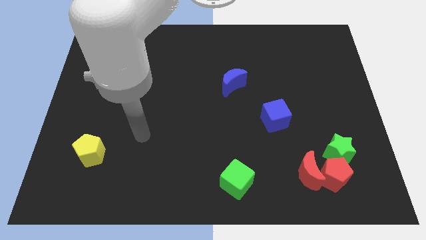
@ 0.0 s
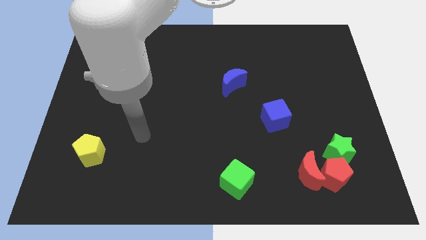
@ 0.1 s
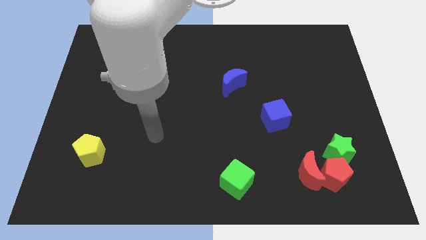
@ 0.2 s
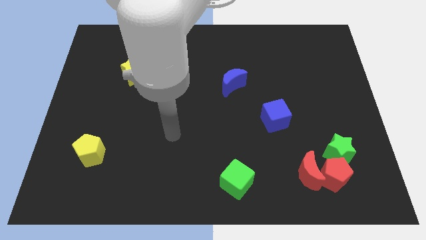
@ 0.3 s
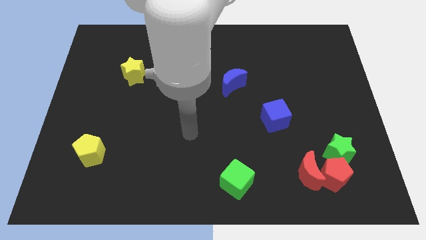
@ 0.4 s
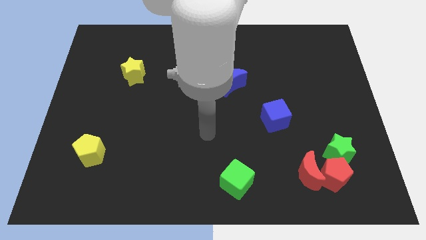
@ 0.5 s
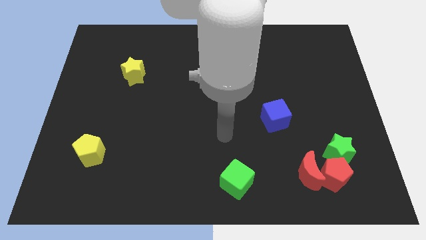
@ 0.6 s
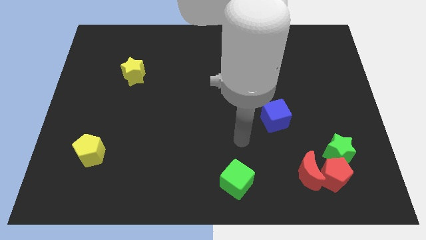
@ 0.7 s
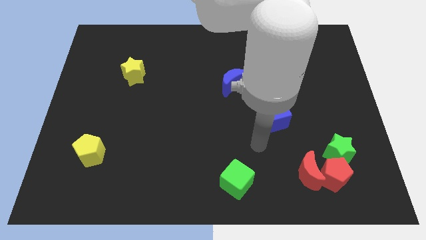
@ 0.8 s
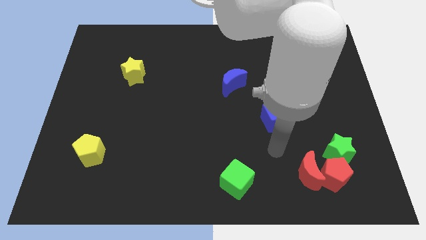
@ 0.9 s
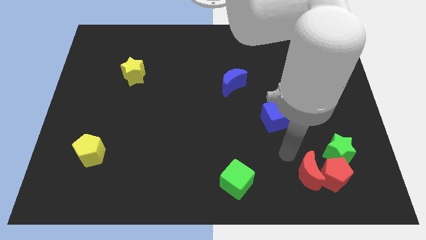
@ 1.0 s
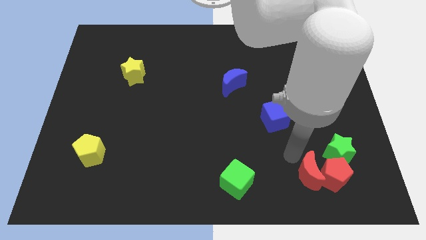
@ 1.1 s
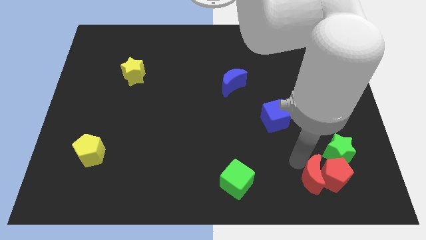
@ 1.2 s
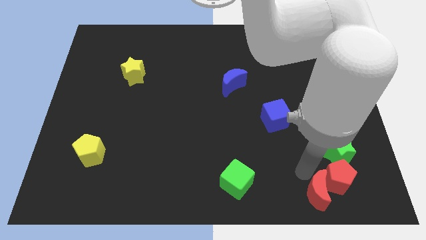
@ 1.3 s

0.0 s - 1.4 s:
touch the left side of the red crescent

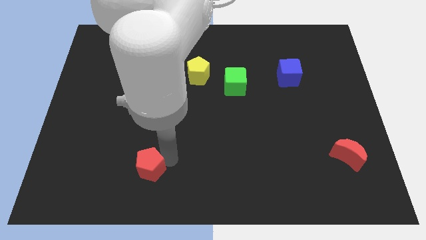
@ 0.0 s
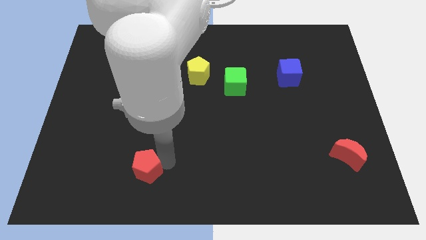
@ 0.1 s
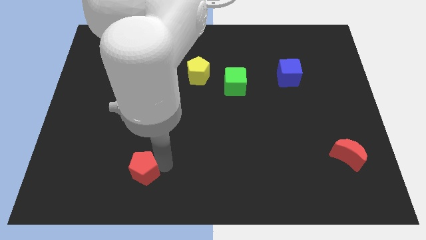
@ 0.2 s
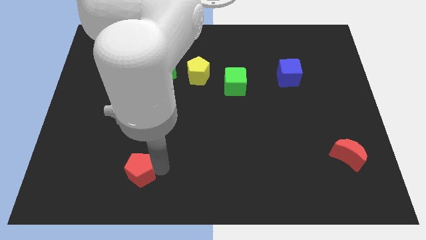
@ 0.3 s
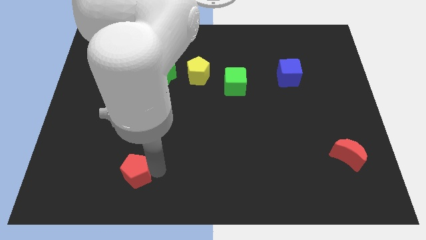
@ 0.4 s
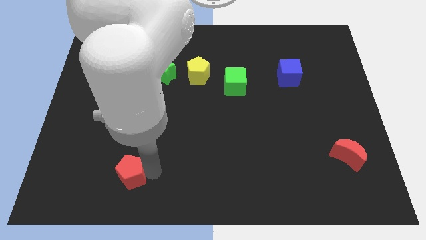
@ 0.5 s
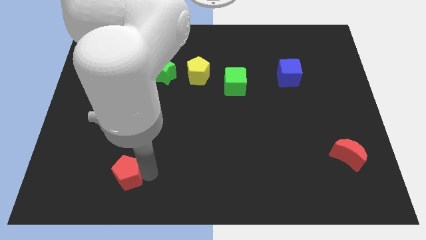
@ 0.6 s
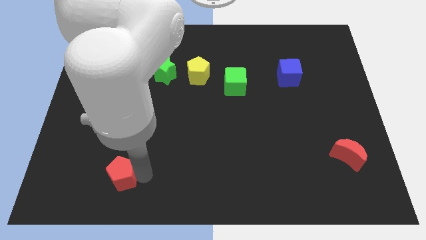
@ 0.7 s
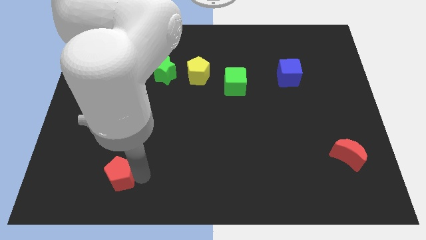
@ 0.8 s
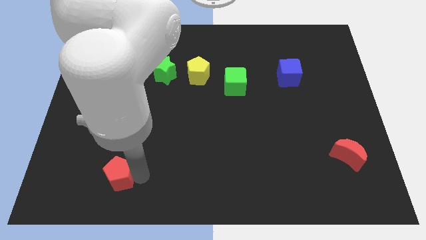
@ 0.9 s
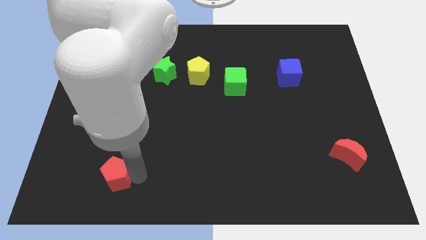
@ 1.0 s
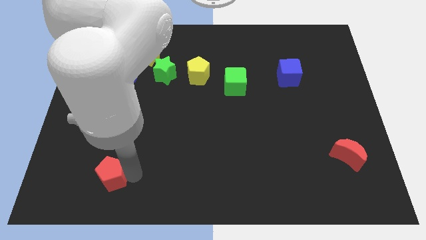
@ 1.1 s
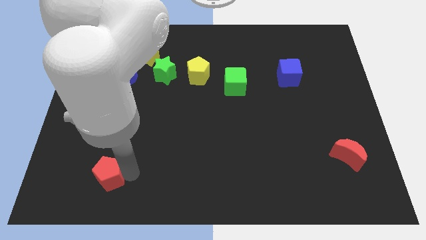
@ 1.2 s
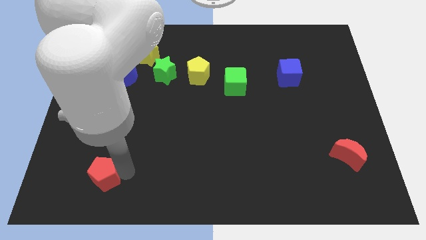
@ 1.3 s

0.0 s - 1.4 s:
push the red pentagon vertically at the bottom side of the blue moon

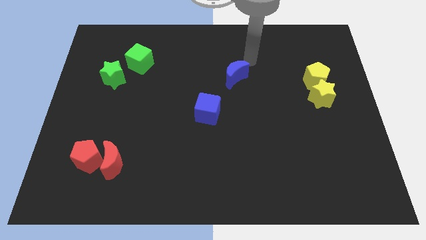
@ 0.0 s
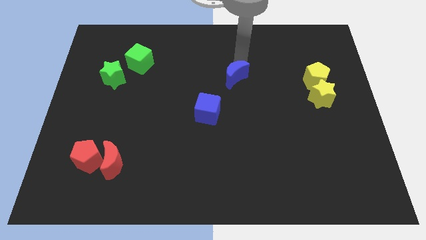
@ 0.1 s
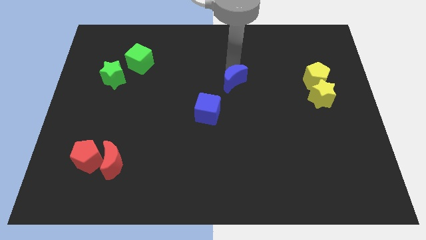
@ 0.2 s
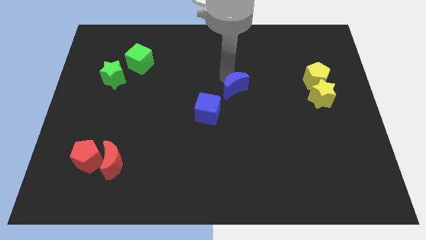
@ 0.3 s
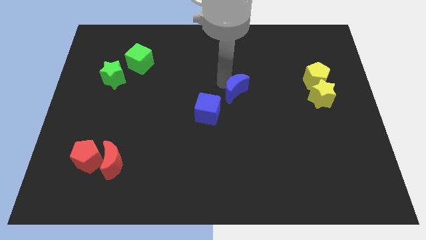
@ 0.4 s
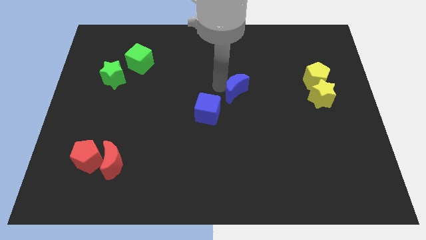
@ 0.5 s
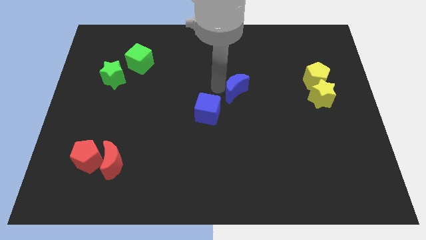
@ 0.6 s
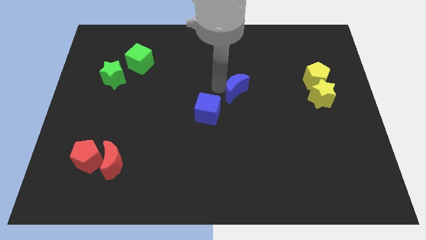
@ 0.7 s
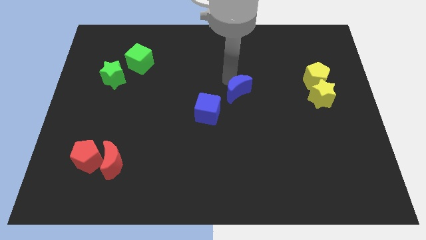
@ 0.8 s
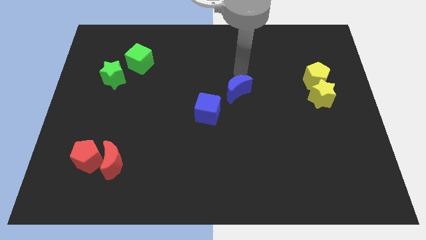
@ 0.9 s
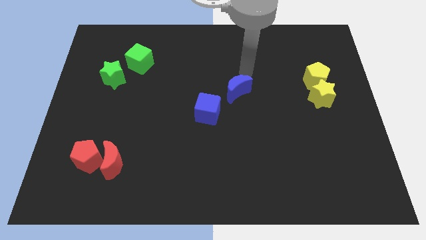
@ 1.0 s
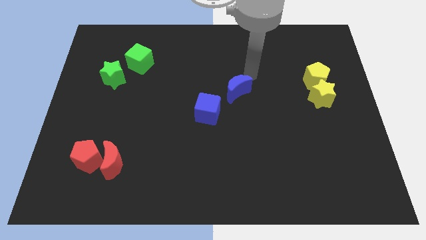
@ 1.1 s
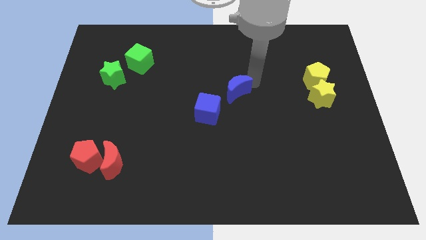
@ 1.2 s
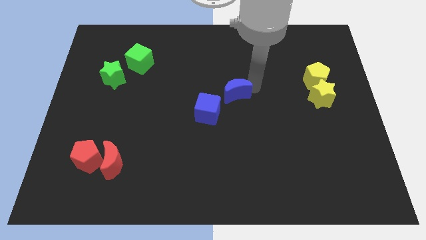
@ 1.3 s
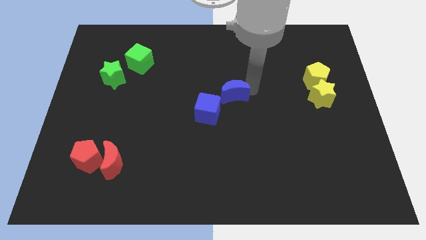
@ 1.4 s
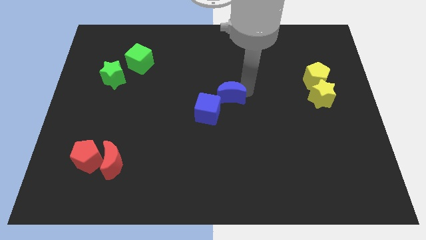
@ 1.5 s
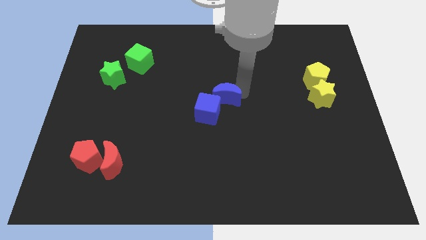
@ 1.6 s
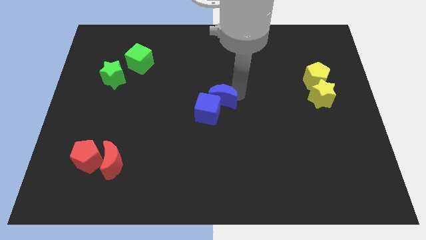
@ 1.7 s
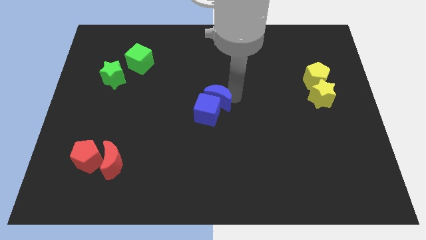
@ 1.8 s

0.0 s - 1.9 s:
push the blue crescent into blue block

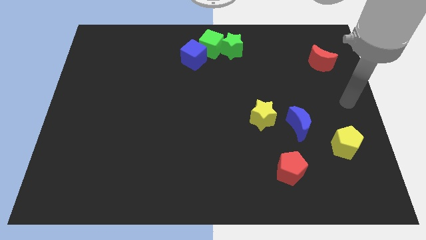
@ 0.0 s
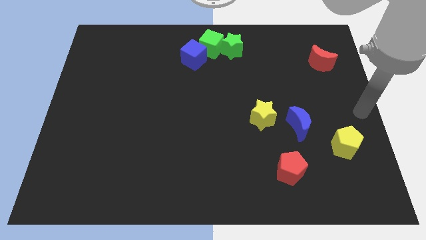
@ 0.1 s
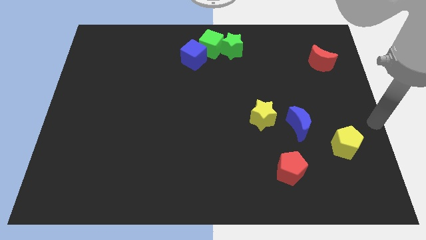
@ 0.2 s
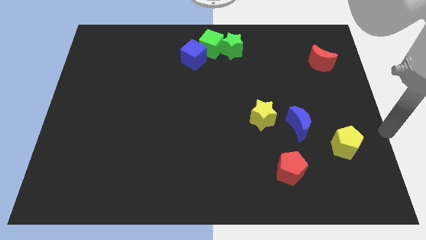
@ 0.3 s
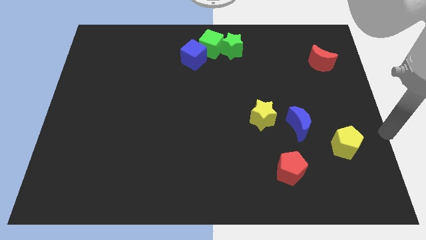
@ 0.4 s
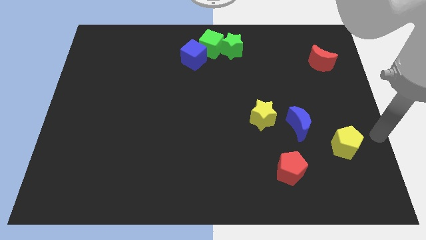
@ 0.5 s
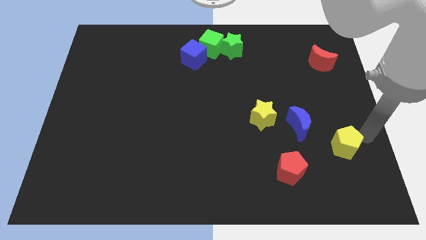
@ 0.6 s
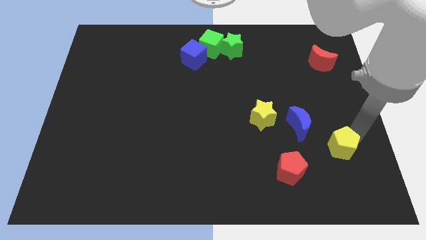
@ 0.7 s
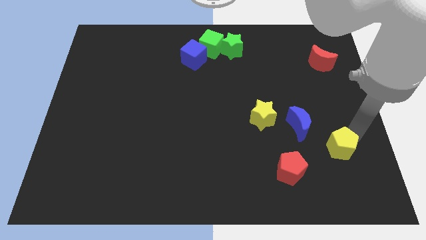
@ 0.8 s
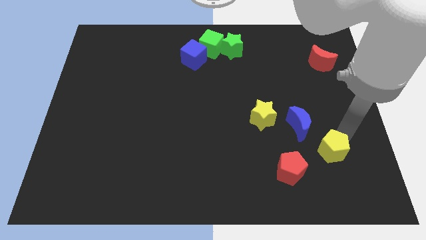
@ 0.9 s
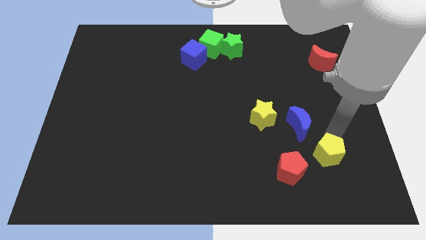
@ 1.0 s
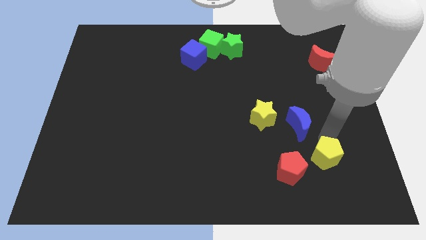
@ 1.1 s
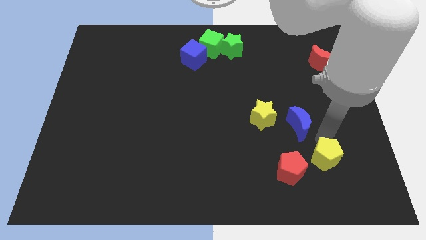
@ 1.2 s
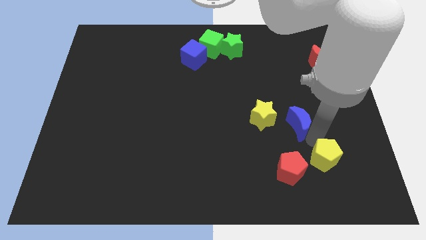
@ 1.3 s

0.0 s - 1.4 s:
push yellow pentagon towards the red pentagon

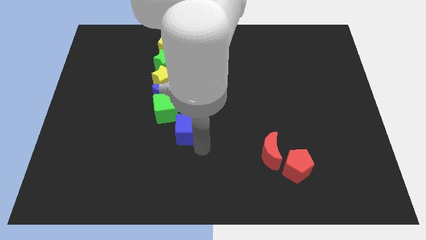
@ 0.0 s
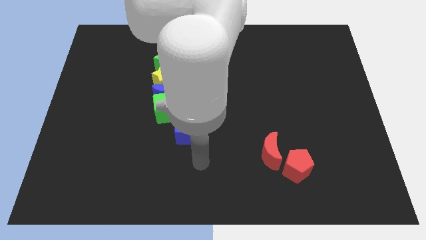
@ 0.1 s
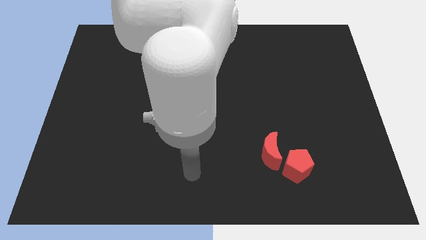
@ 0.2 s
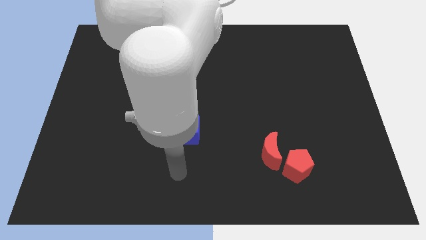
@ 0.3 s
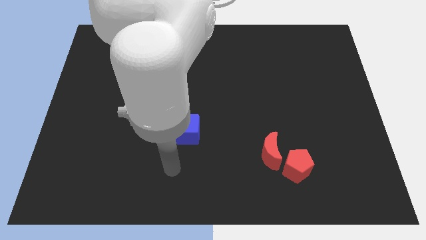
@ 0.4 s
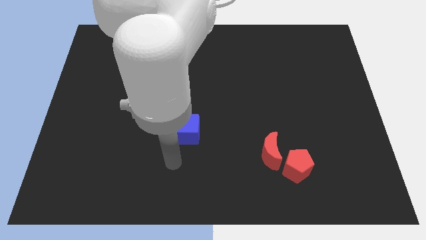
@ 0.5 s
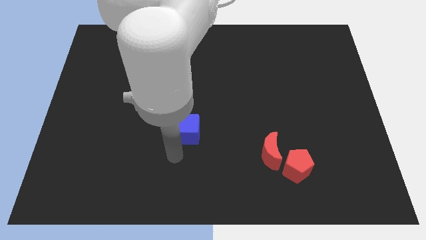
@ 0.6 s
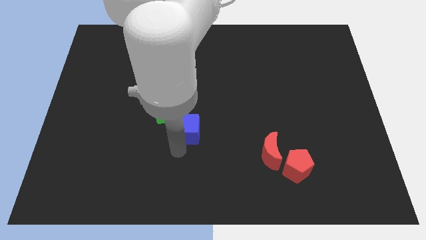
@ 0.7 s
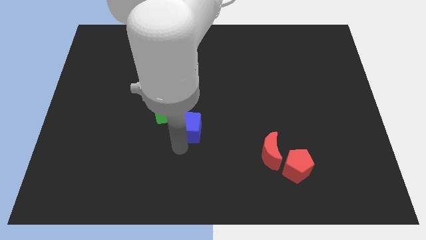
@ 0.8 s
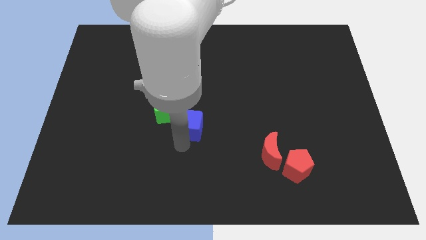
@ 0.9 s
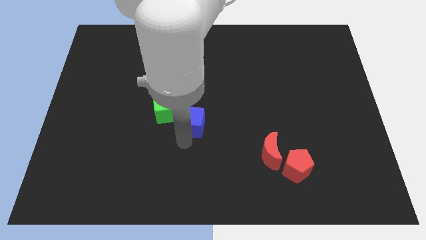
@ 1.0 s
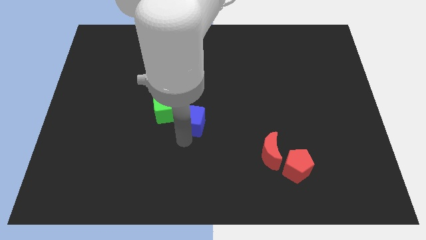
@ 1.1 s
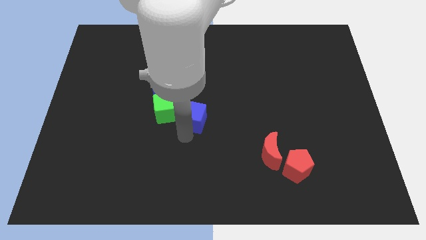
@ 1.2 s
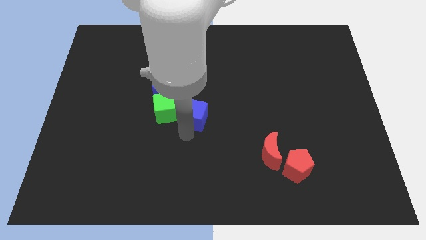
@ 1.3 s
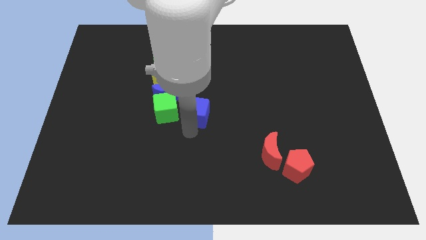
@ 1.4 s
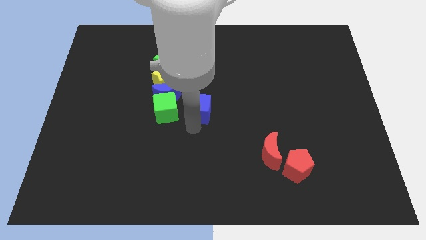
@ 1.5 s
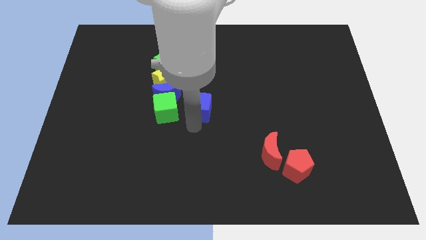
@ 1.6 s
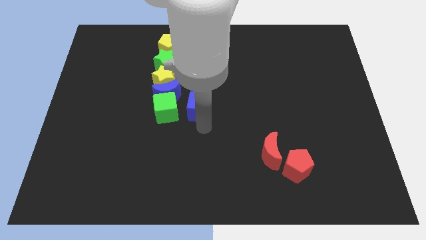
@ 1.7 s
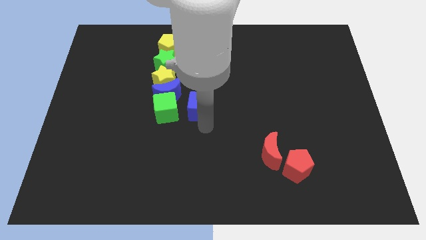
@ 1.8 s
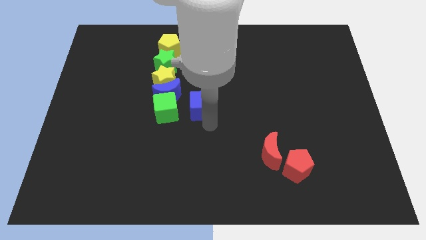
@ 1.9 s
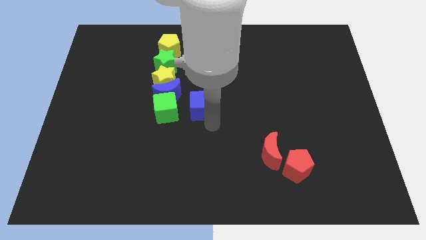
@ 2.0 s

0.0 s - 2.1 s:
slide blue cube diagonal to right of green cube

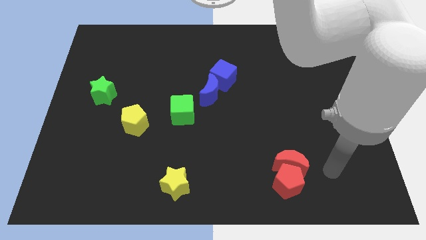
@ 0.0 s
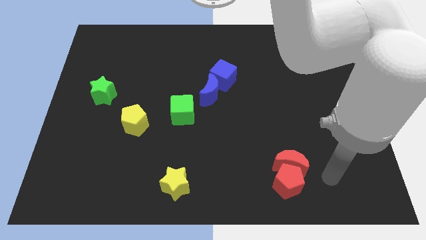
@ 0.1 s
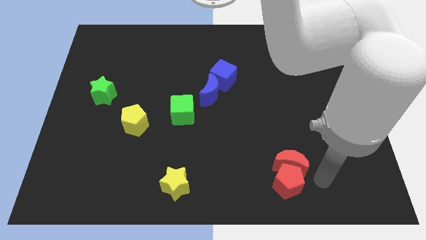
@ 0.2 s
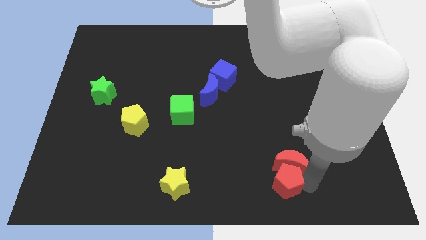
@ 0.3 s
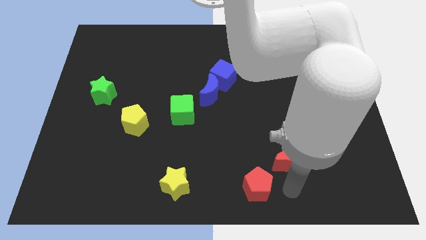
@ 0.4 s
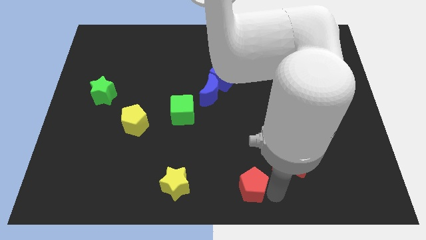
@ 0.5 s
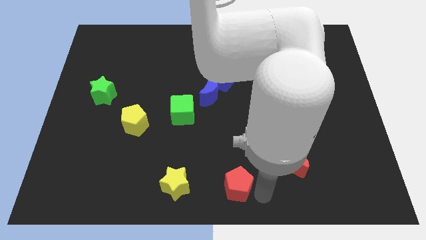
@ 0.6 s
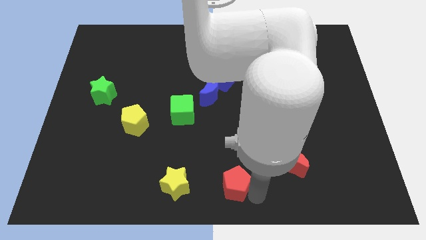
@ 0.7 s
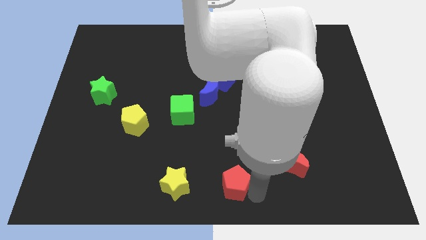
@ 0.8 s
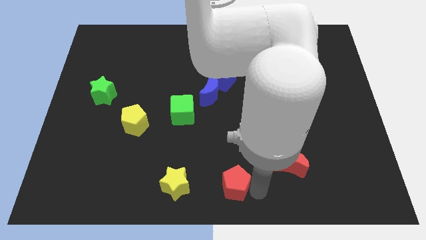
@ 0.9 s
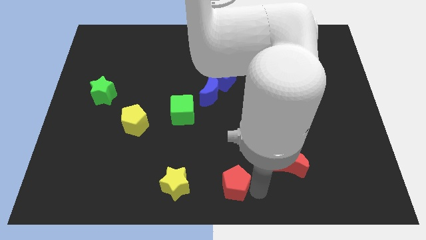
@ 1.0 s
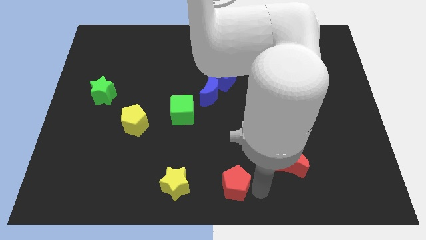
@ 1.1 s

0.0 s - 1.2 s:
separate the red pentagon from the red crescent
